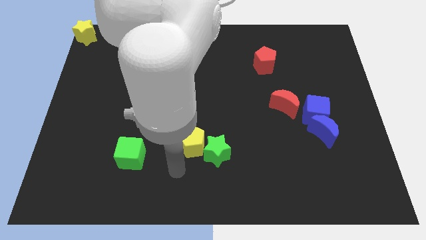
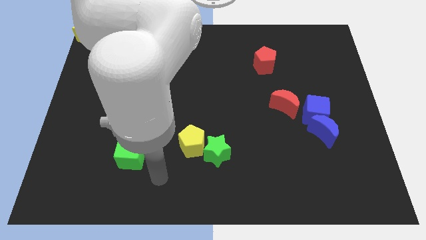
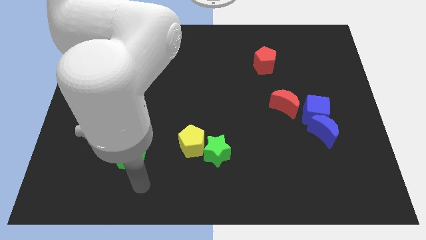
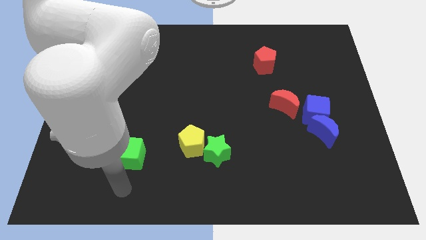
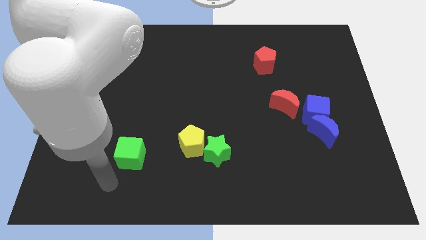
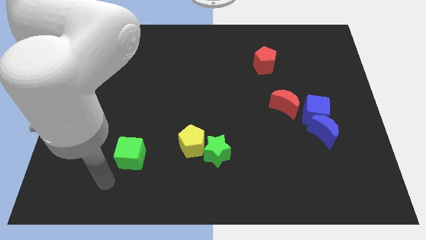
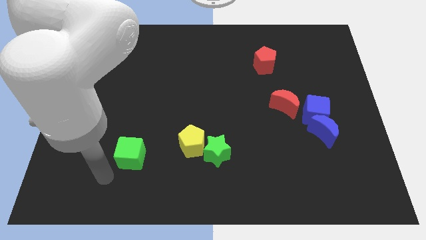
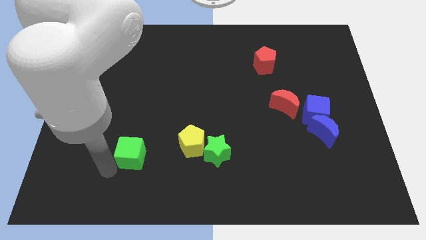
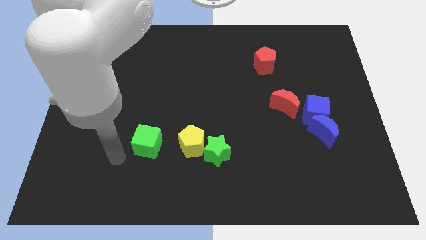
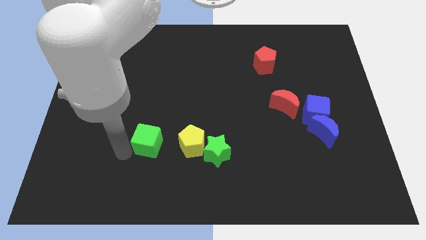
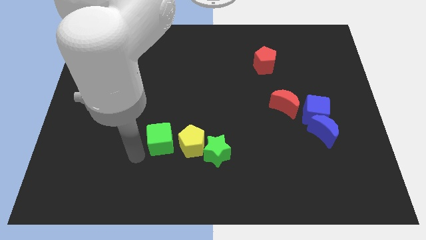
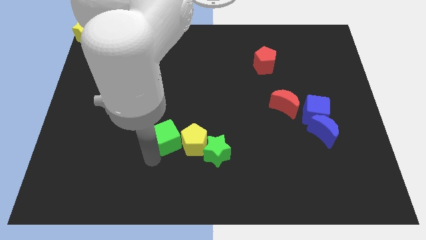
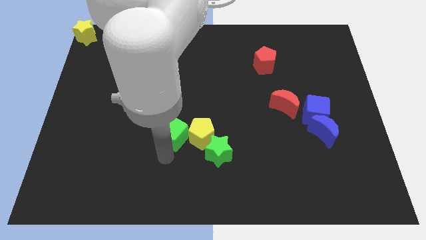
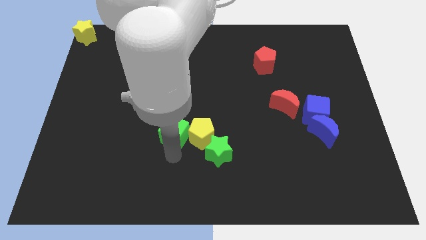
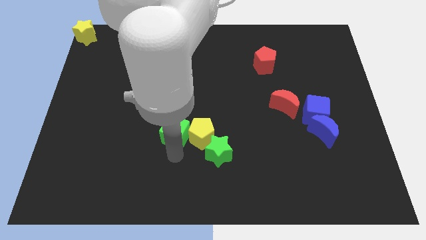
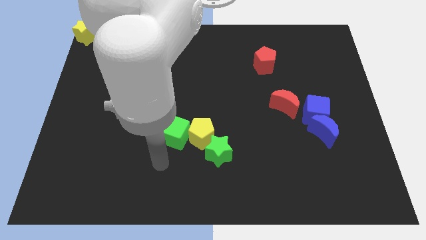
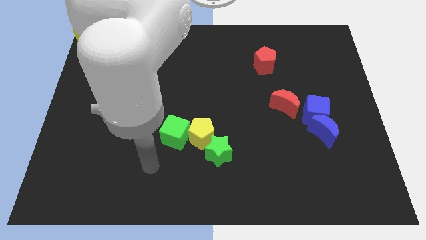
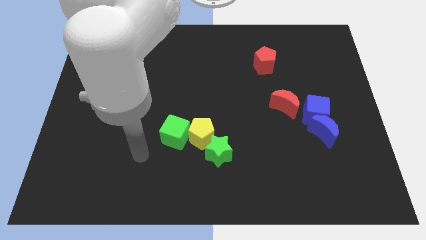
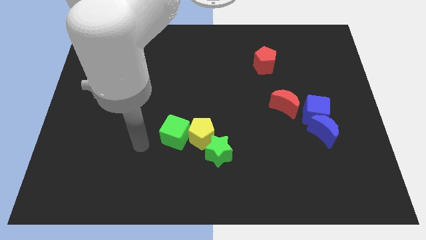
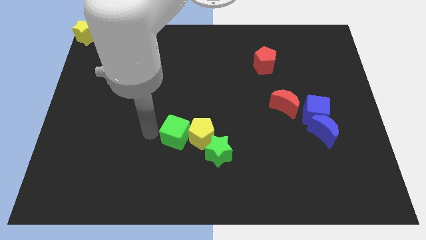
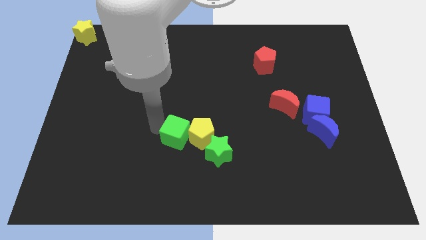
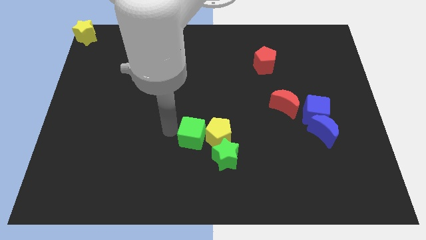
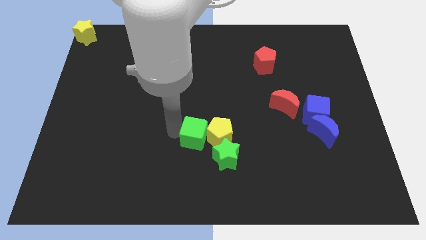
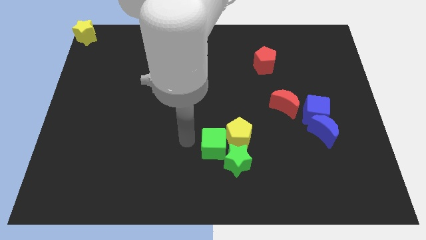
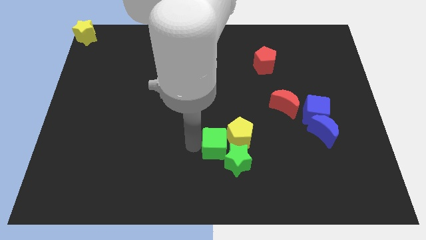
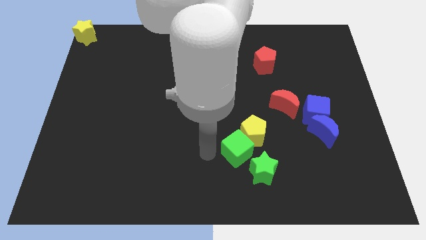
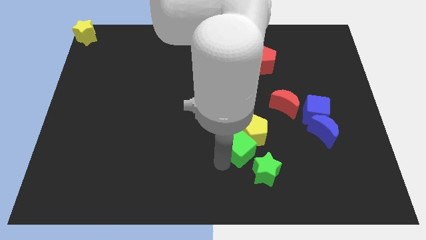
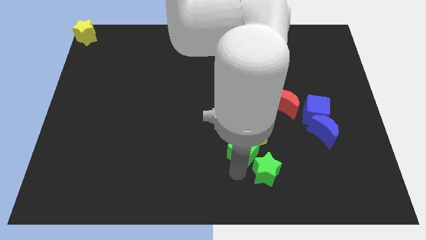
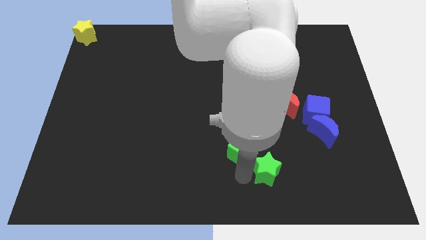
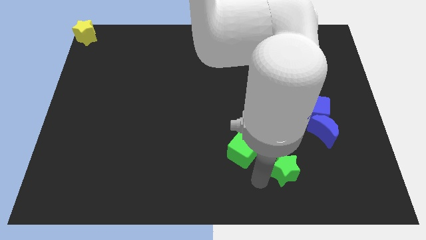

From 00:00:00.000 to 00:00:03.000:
push the group of blocks towards the left

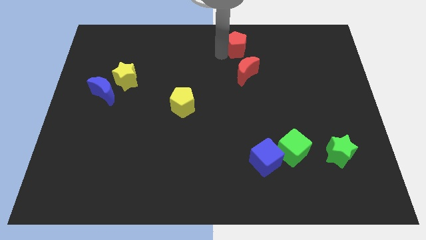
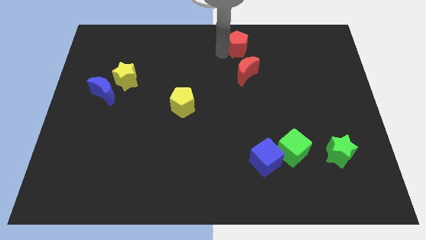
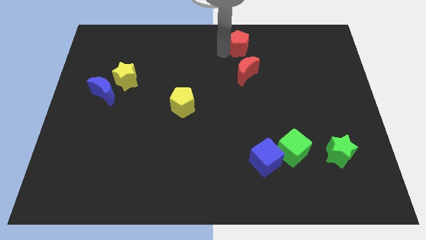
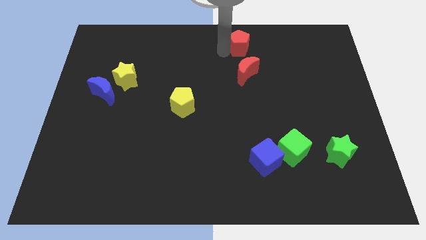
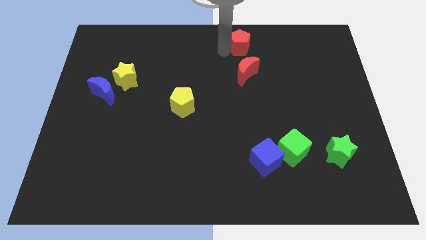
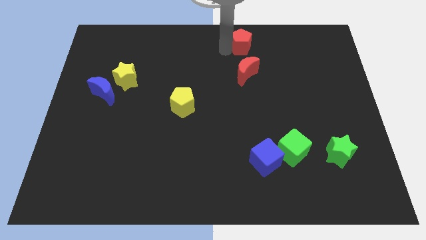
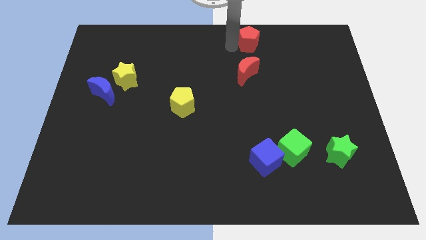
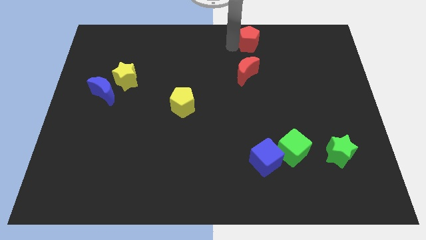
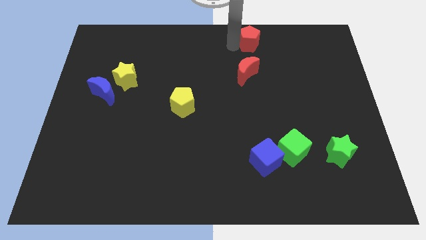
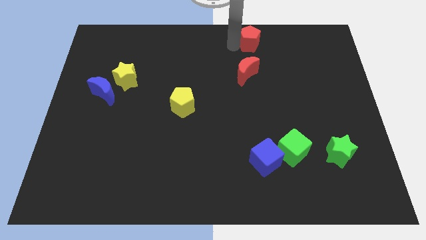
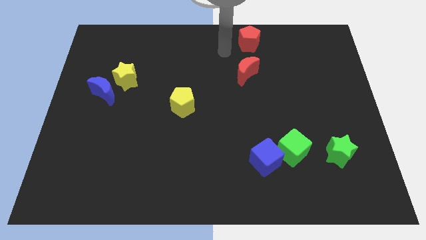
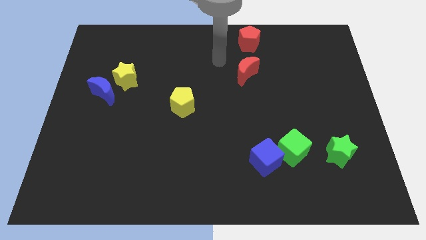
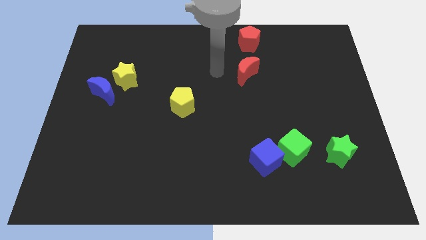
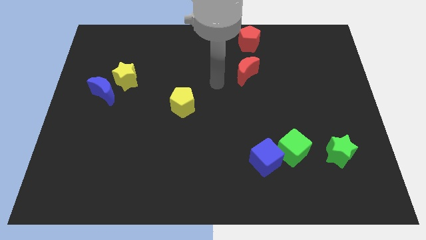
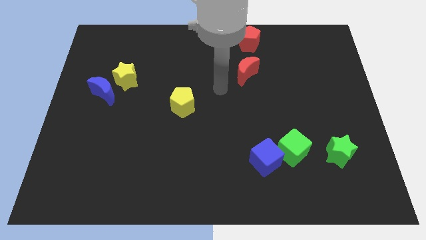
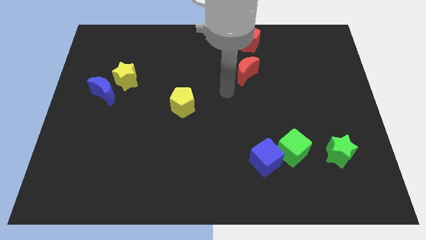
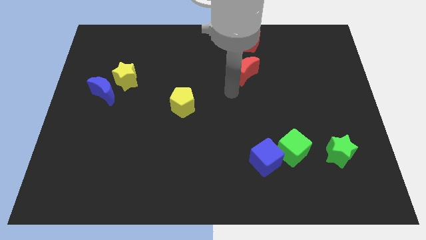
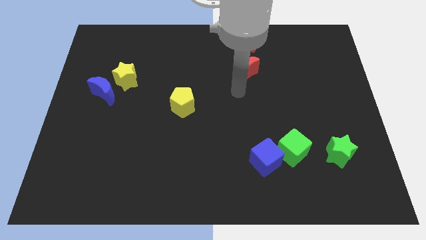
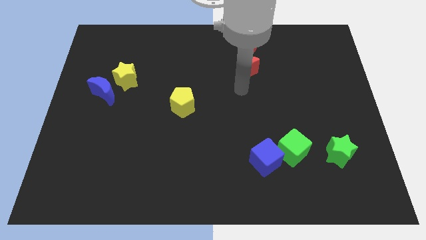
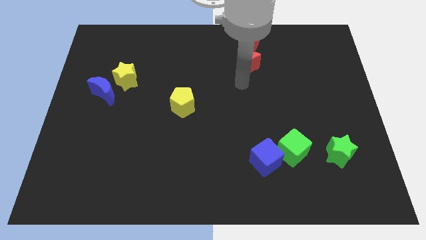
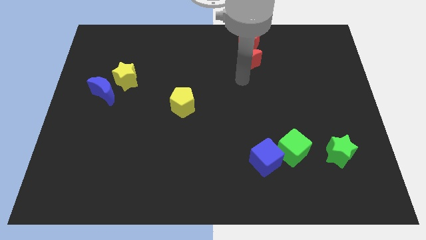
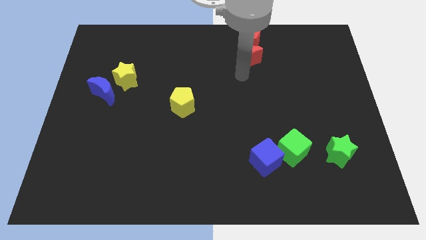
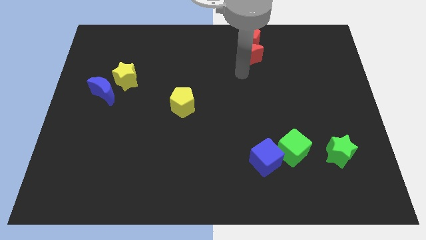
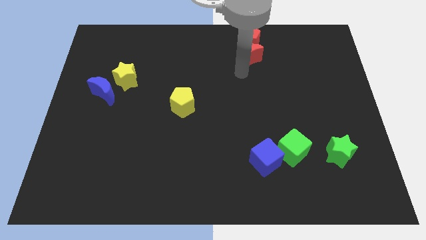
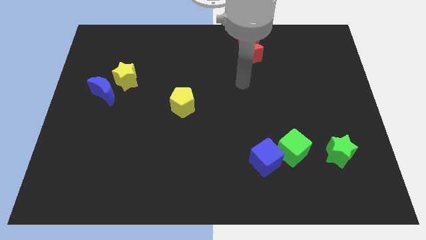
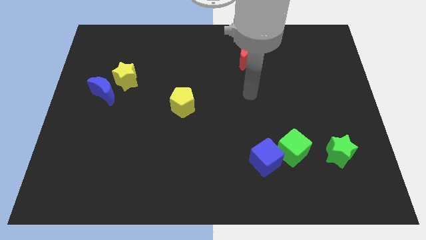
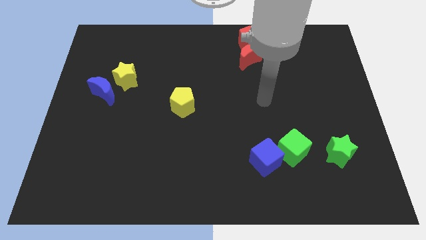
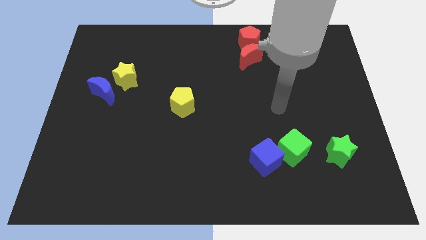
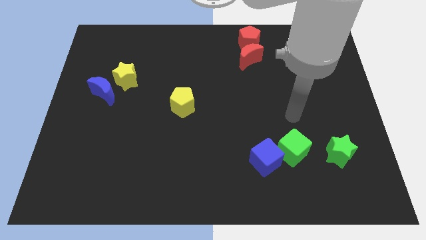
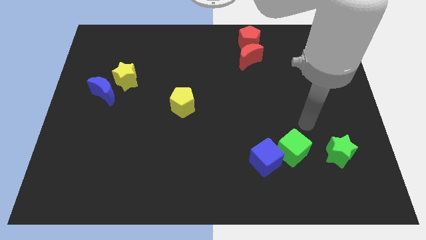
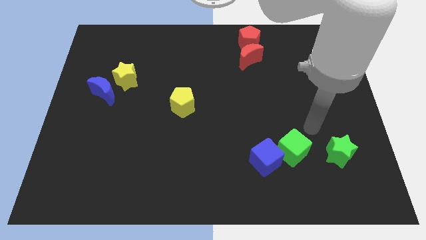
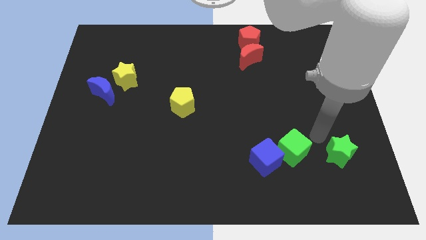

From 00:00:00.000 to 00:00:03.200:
push the red moon into the red pentagon

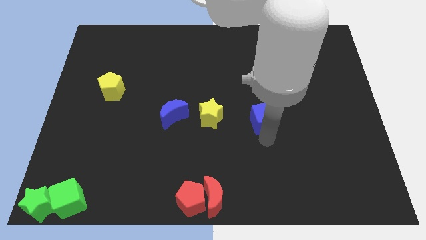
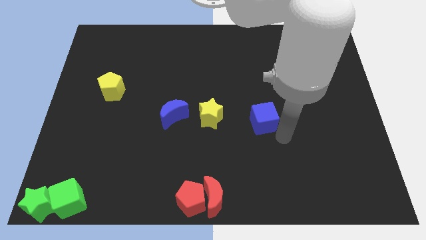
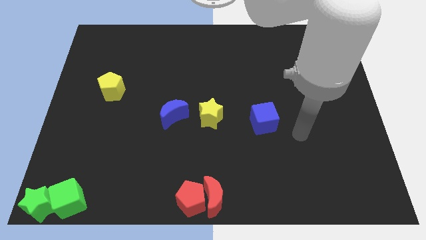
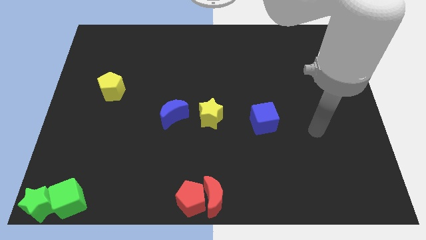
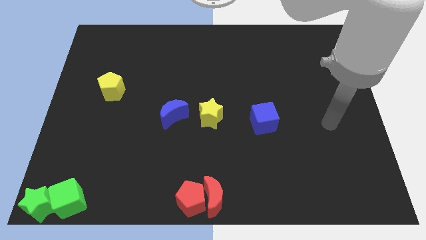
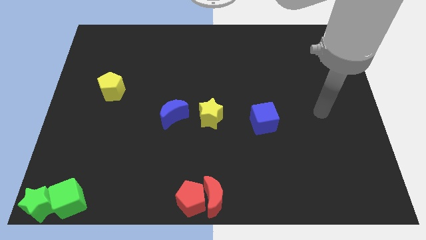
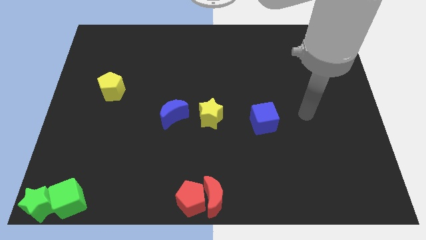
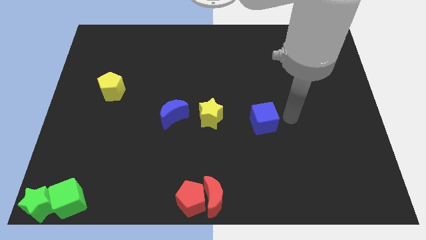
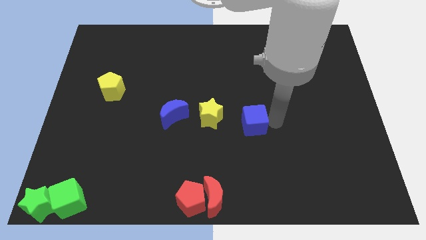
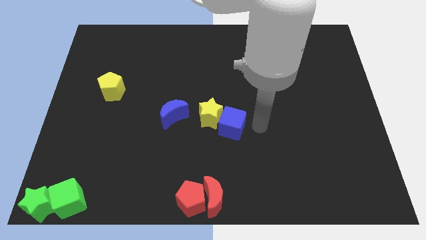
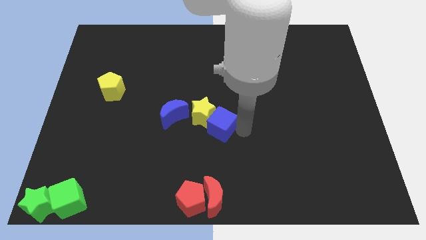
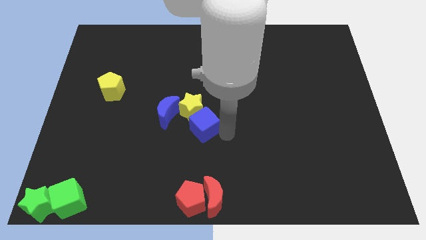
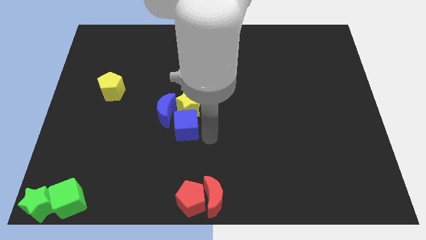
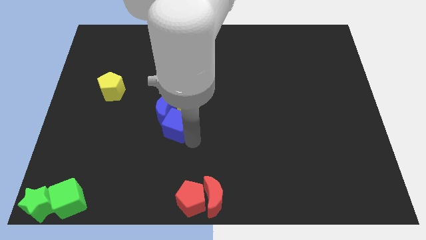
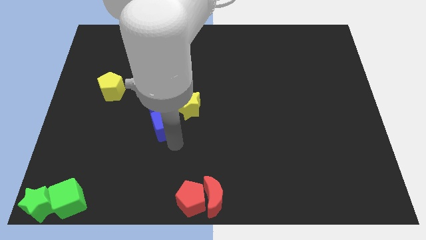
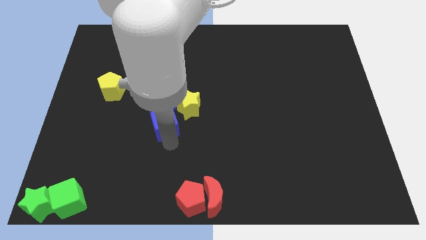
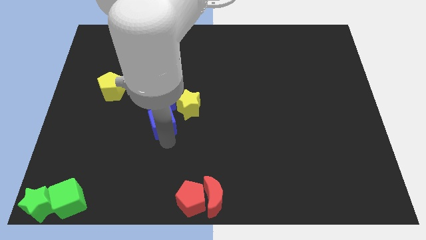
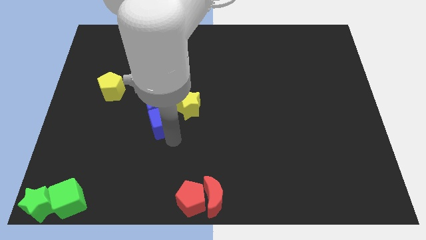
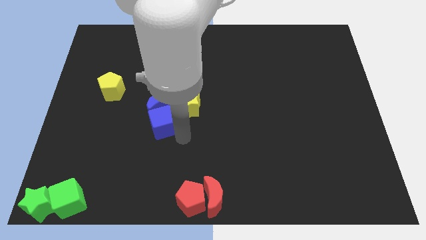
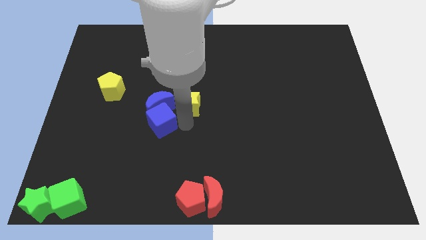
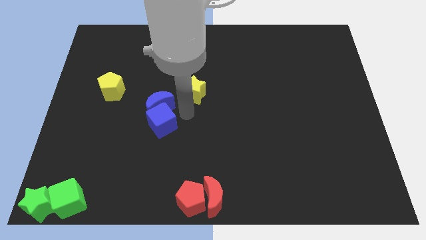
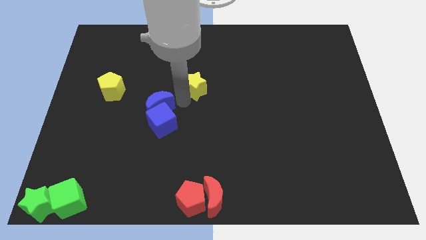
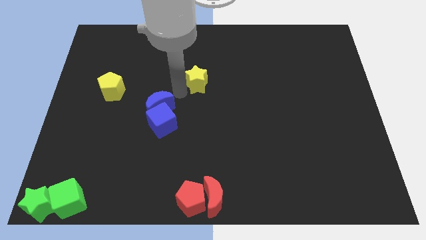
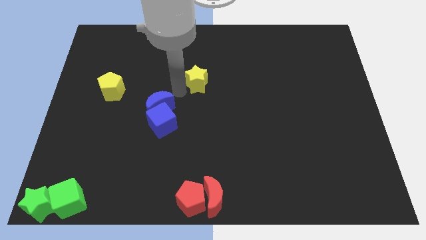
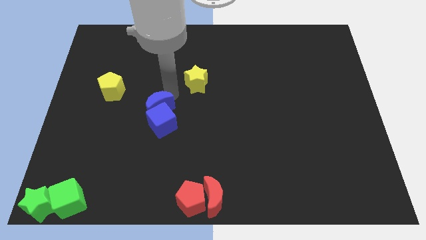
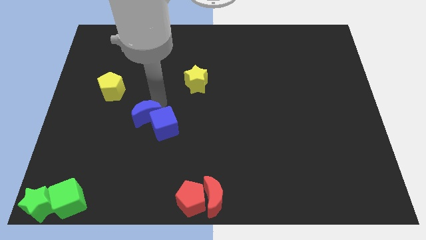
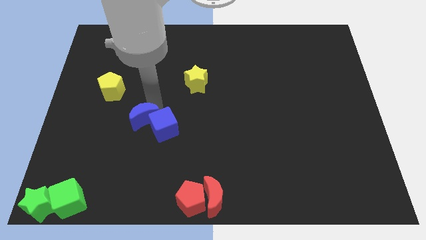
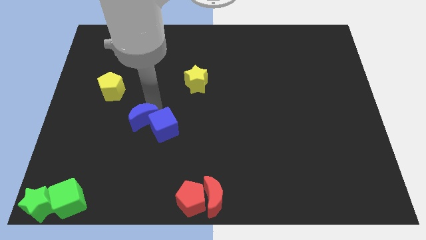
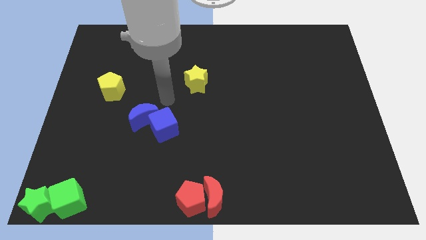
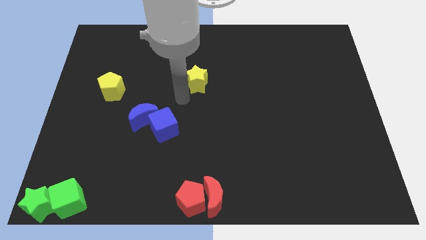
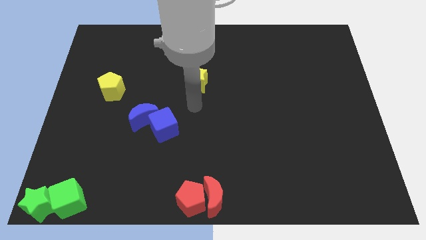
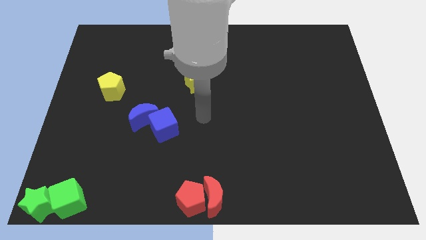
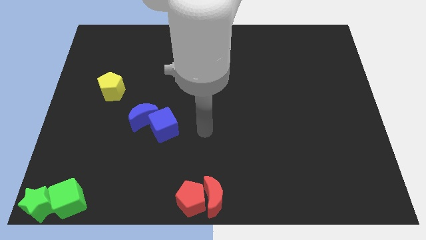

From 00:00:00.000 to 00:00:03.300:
place both the blue blocks at the bottom right side of the yellow pentagon
